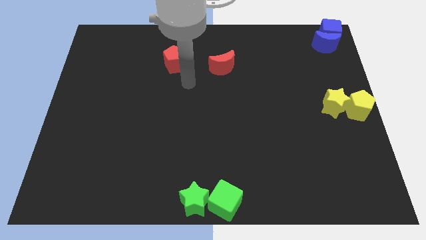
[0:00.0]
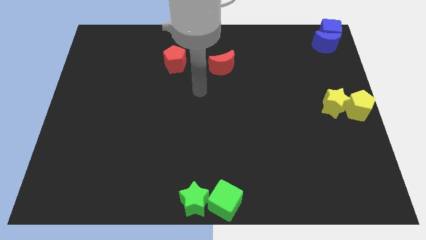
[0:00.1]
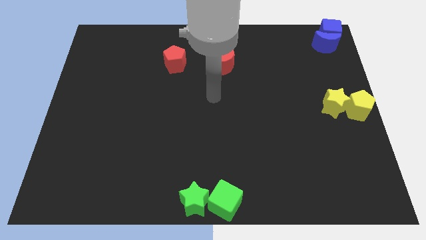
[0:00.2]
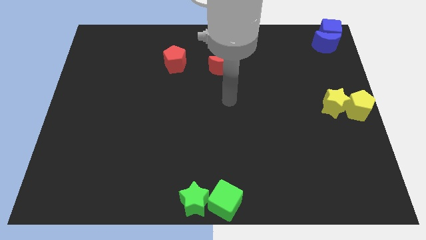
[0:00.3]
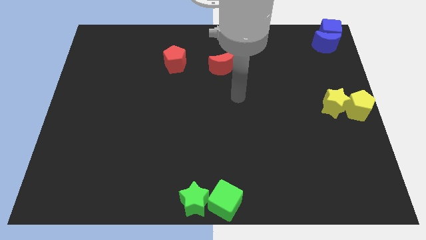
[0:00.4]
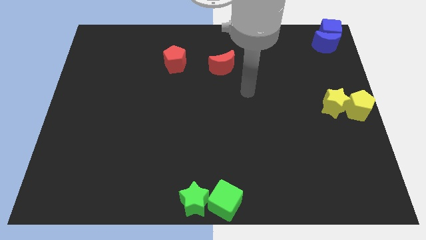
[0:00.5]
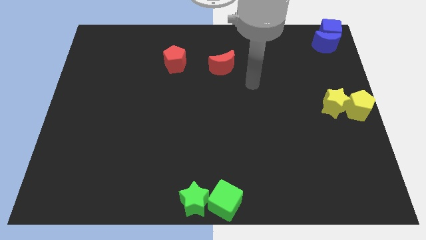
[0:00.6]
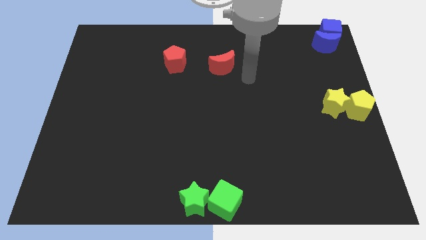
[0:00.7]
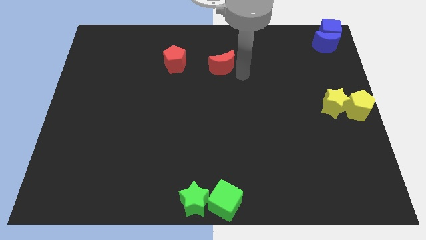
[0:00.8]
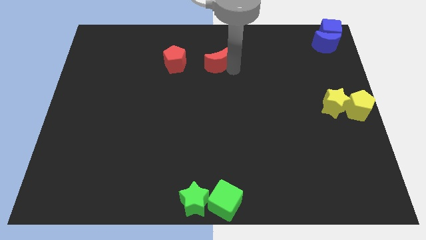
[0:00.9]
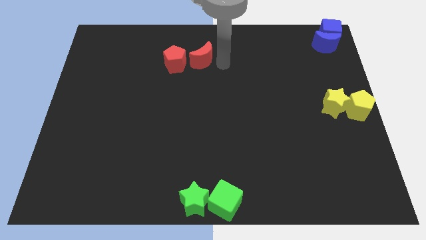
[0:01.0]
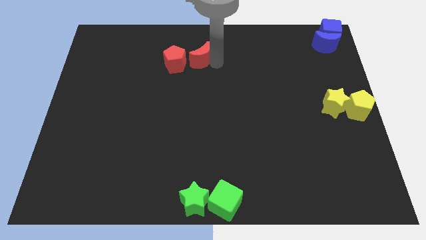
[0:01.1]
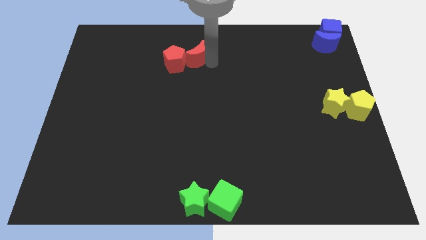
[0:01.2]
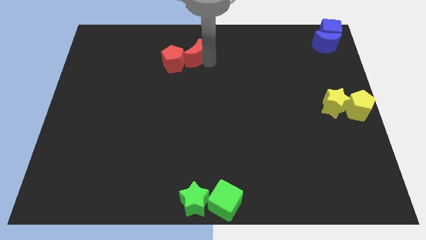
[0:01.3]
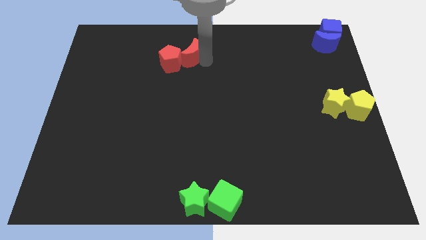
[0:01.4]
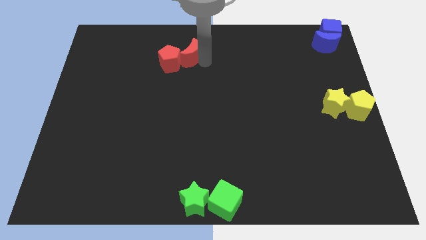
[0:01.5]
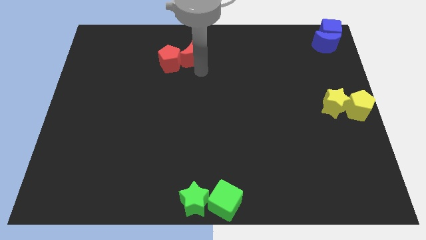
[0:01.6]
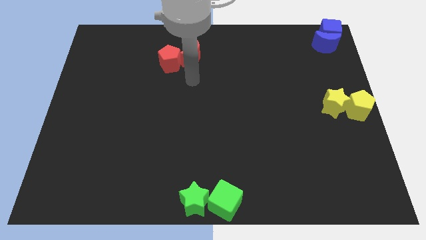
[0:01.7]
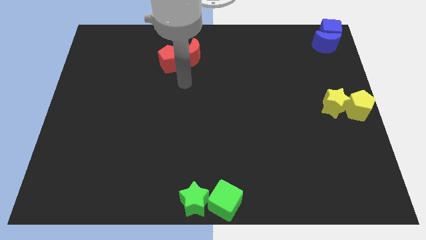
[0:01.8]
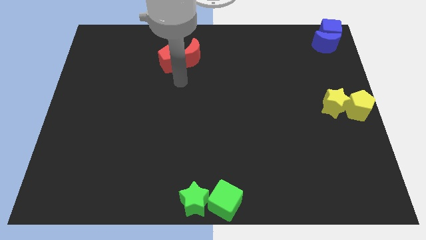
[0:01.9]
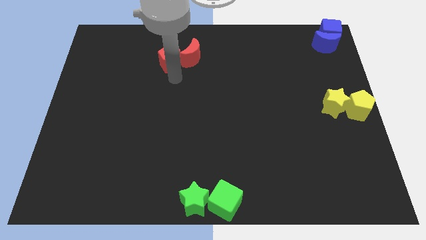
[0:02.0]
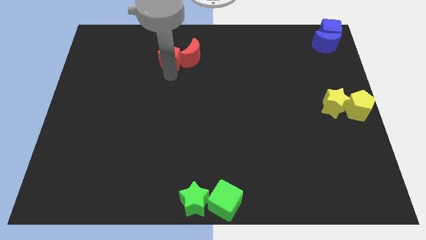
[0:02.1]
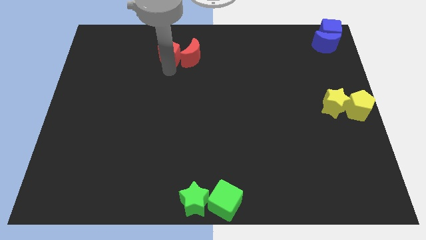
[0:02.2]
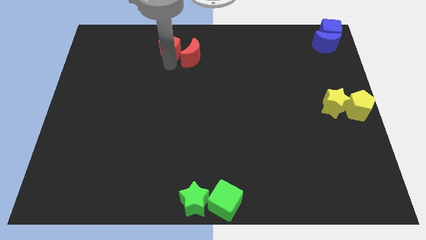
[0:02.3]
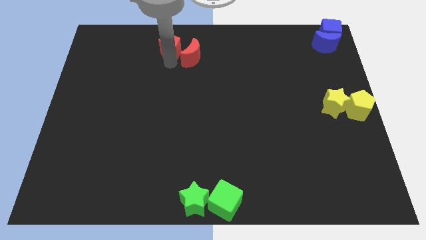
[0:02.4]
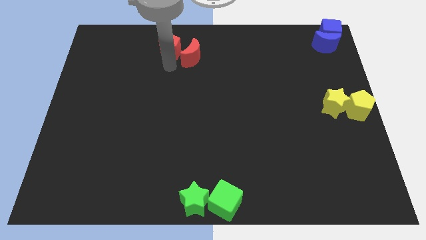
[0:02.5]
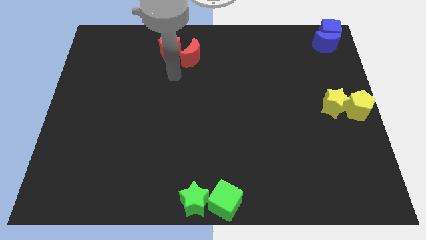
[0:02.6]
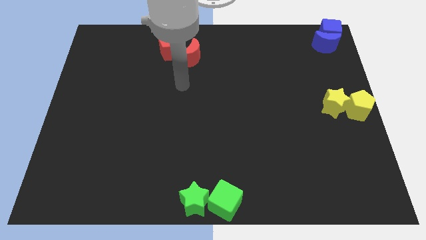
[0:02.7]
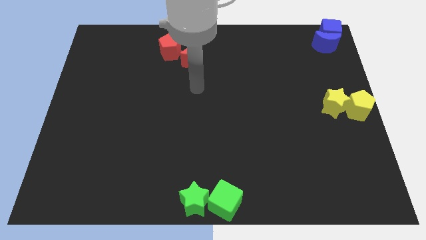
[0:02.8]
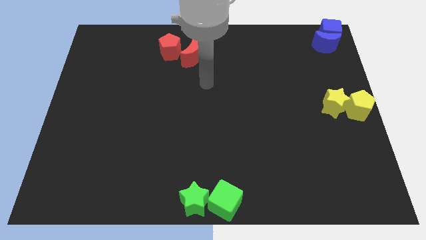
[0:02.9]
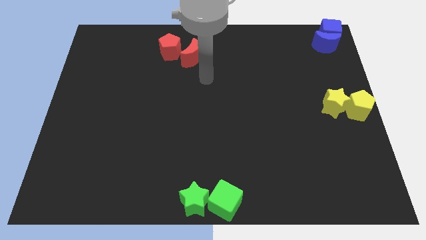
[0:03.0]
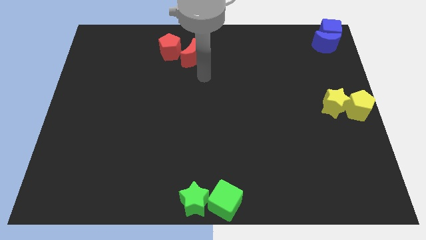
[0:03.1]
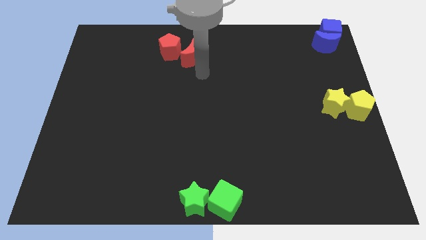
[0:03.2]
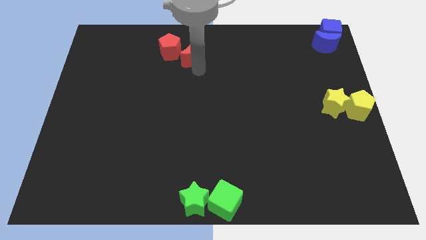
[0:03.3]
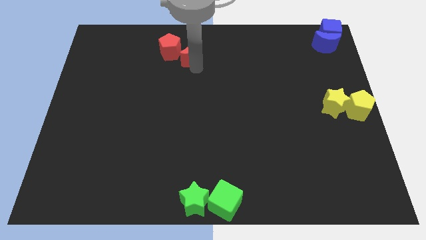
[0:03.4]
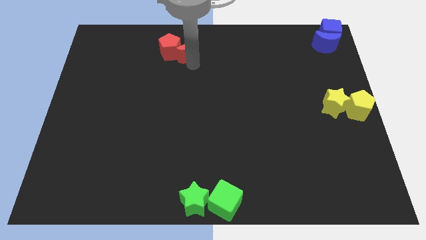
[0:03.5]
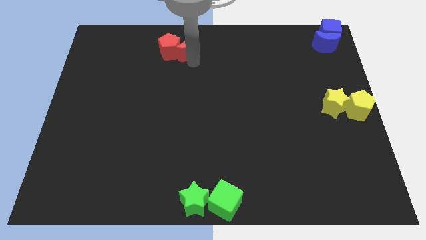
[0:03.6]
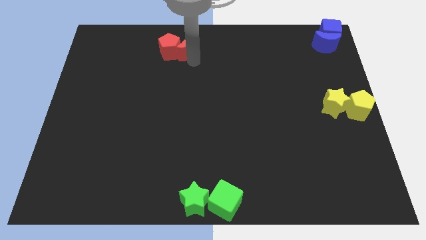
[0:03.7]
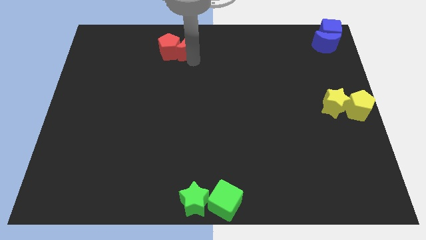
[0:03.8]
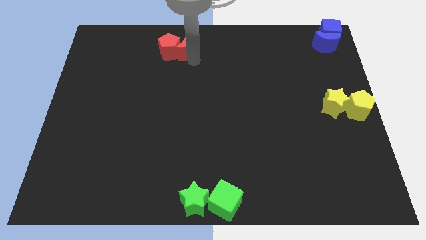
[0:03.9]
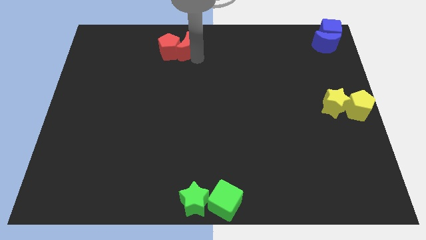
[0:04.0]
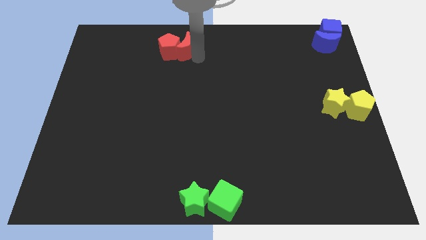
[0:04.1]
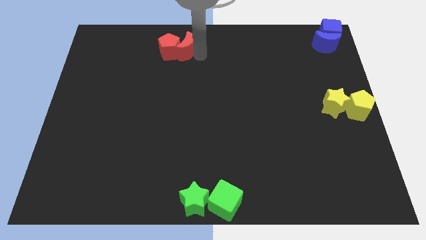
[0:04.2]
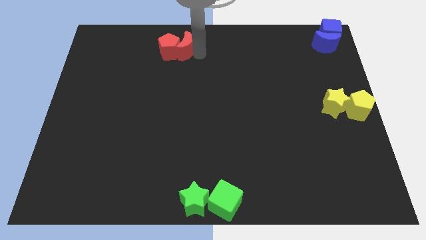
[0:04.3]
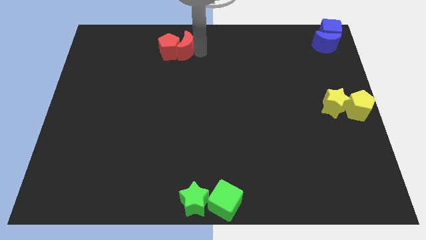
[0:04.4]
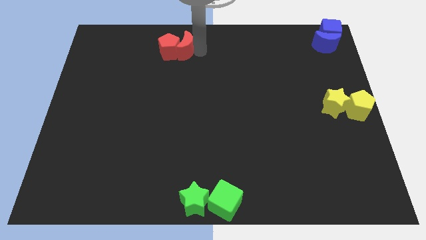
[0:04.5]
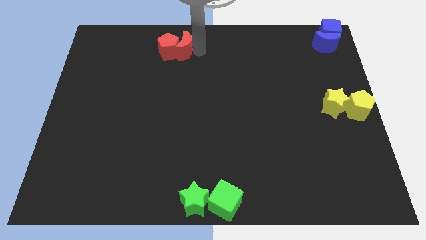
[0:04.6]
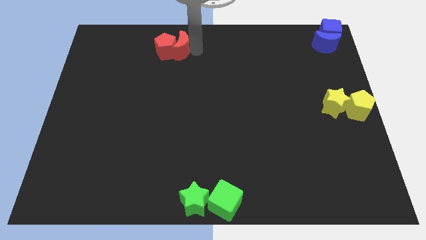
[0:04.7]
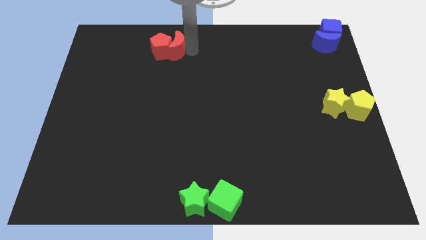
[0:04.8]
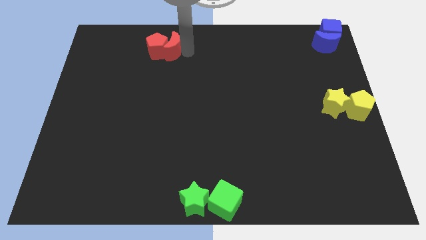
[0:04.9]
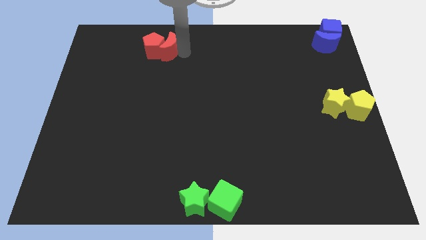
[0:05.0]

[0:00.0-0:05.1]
push the red blocks slightly to the left

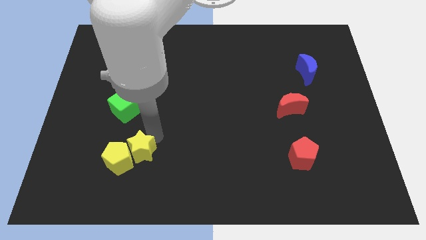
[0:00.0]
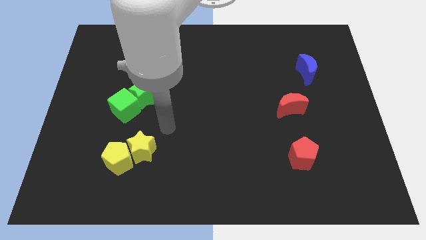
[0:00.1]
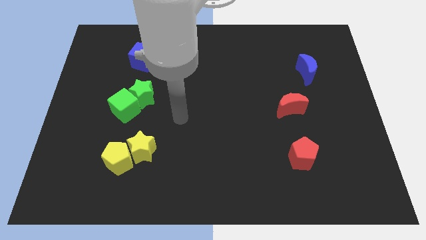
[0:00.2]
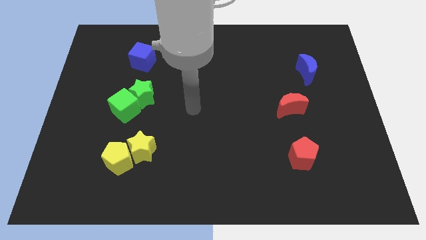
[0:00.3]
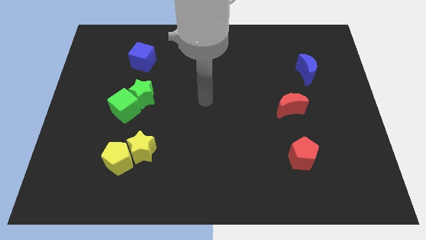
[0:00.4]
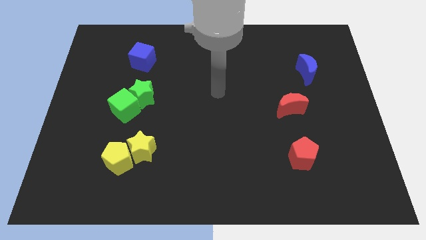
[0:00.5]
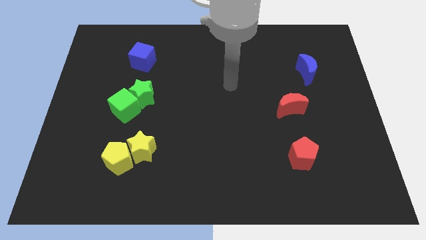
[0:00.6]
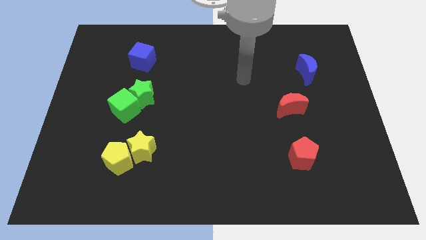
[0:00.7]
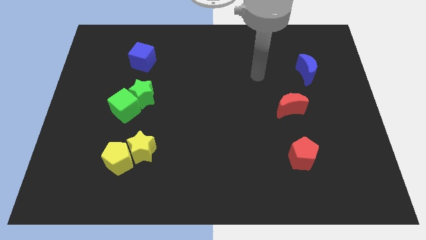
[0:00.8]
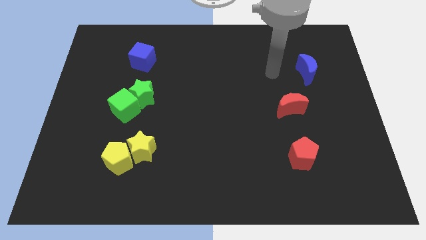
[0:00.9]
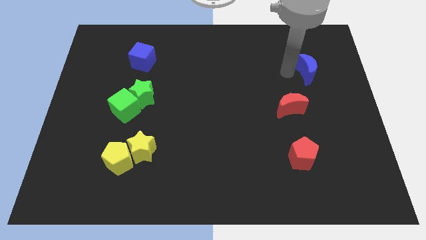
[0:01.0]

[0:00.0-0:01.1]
move the arm away from the yellow blocks

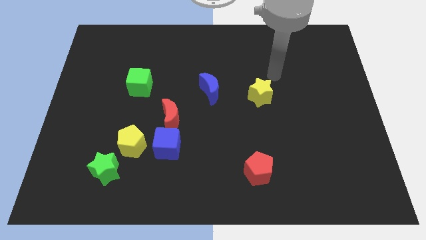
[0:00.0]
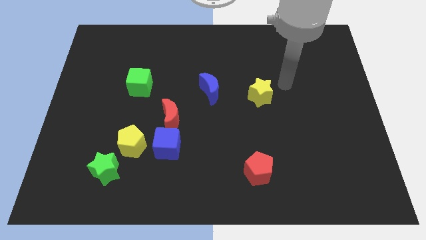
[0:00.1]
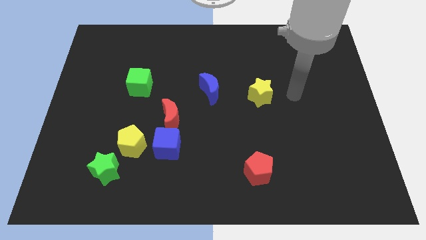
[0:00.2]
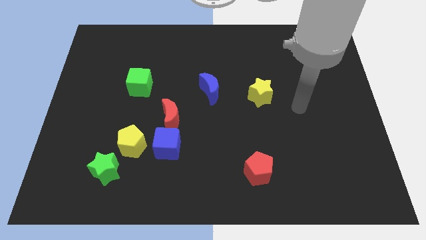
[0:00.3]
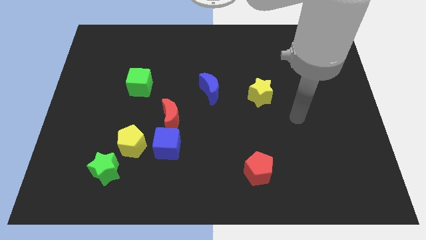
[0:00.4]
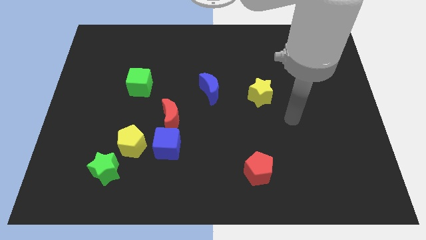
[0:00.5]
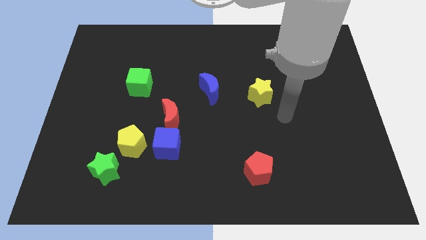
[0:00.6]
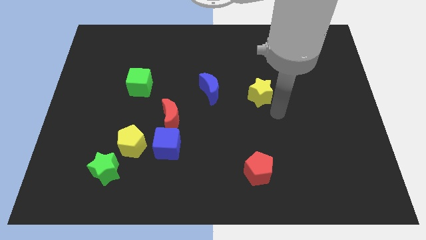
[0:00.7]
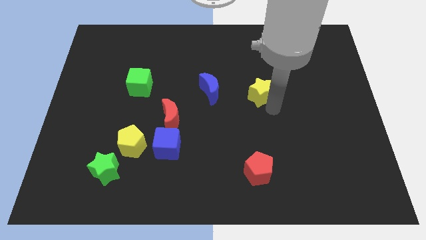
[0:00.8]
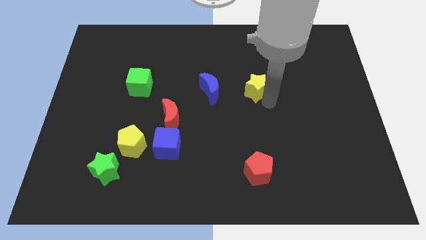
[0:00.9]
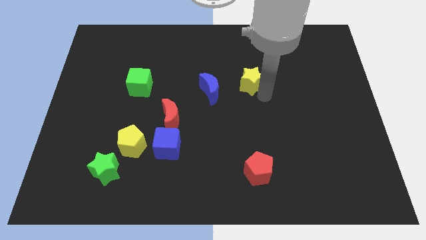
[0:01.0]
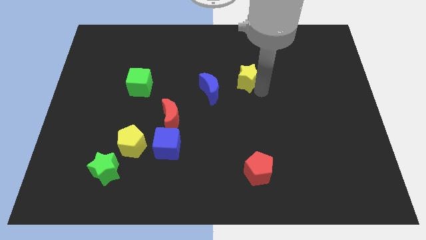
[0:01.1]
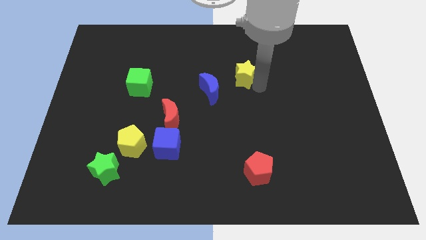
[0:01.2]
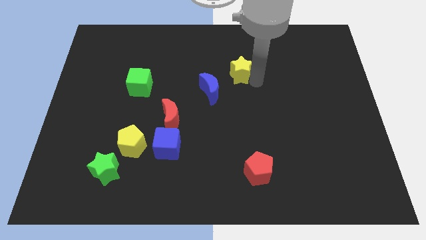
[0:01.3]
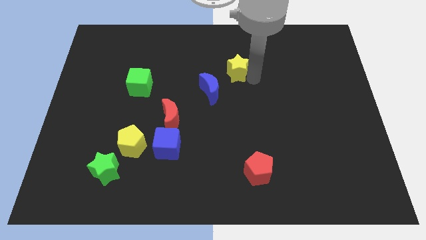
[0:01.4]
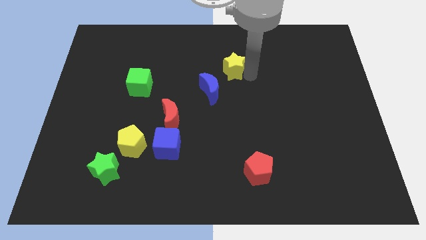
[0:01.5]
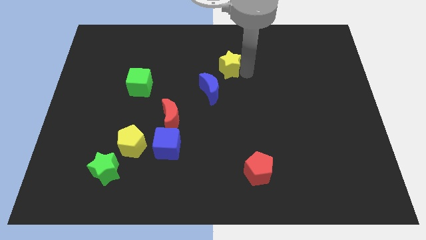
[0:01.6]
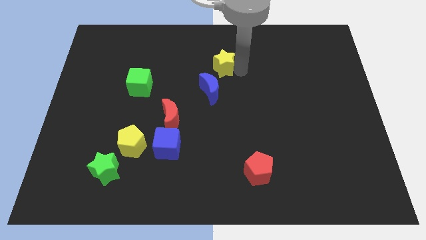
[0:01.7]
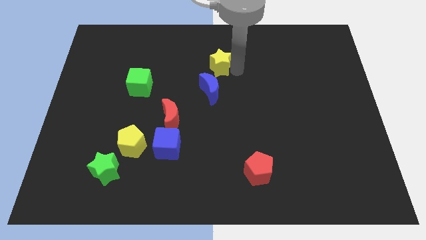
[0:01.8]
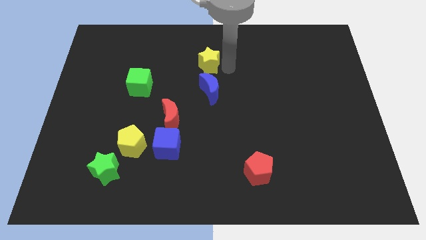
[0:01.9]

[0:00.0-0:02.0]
place yellow star to the top of blue moon

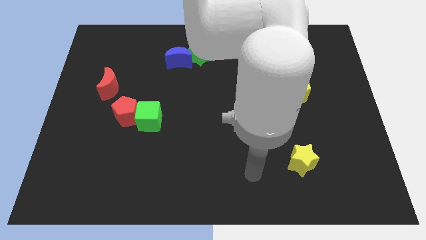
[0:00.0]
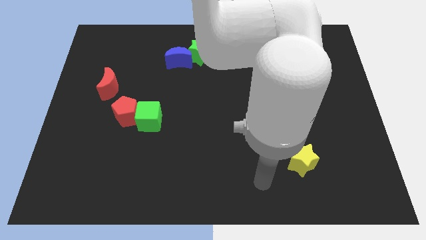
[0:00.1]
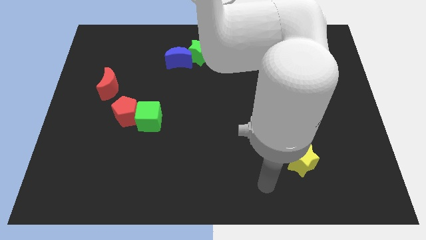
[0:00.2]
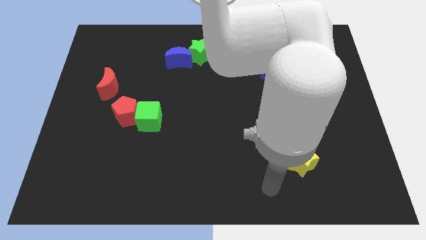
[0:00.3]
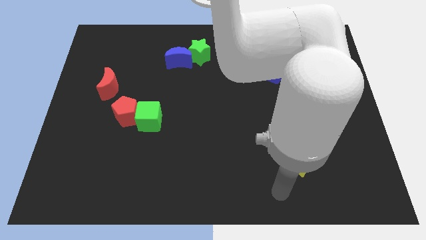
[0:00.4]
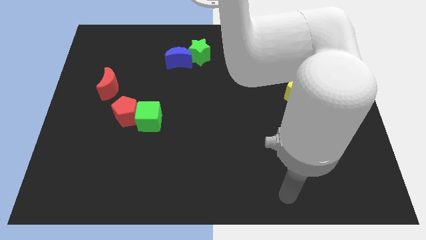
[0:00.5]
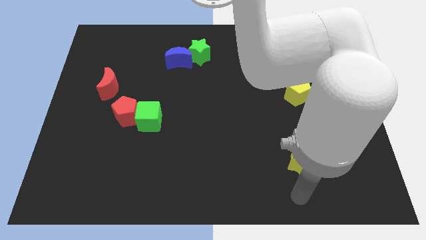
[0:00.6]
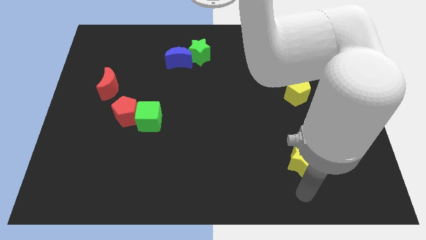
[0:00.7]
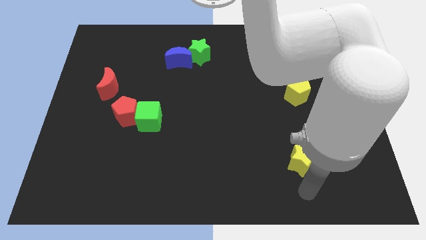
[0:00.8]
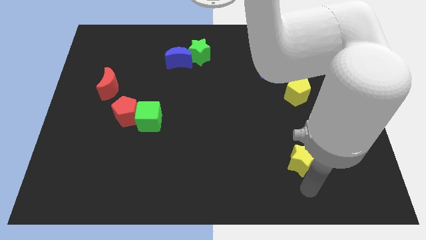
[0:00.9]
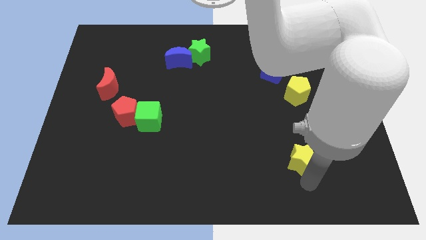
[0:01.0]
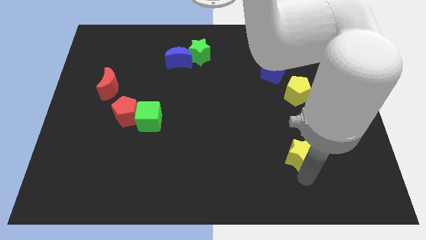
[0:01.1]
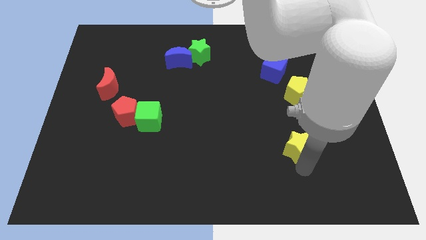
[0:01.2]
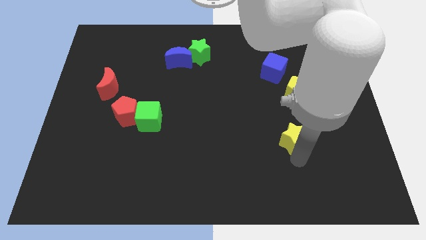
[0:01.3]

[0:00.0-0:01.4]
move the yellow star towards the bottom side of the yellow pentagon
